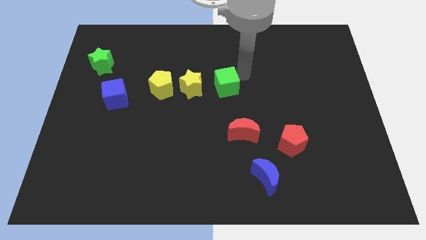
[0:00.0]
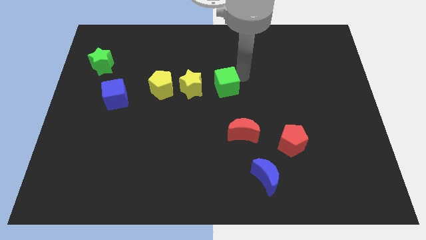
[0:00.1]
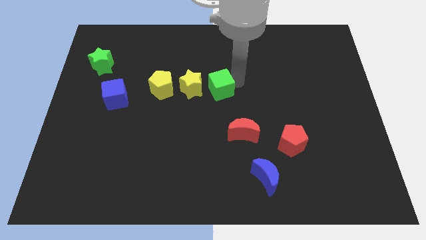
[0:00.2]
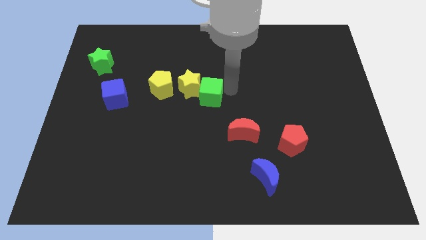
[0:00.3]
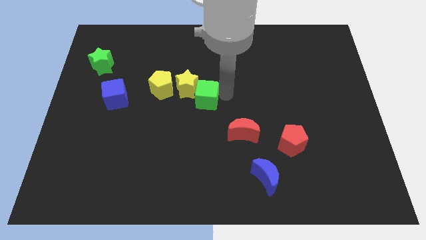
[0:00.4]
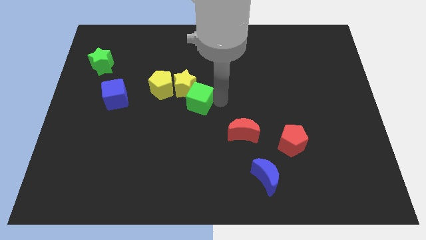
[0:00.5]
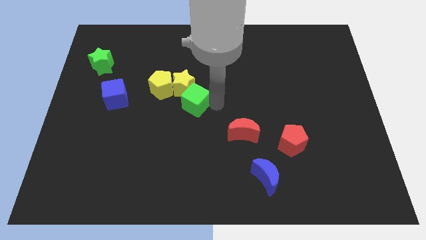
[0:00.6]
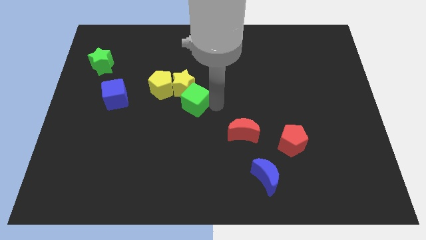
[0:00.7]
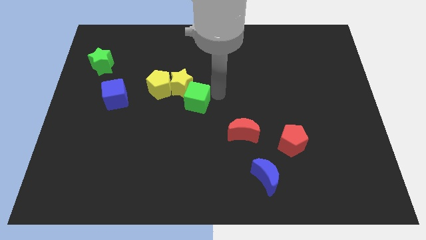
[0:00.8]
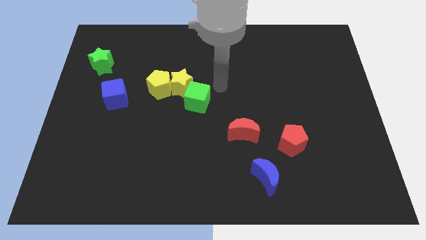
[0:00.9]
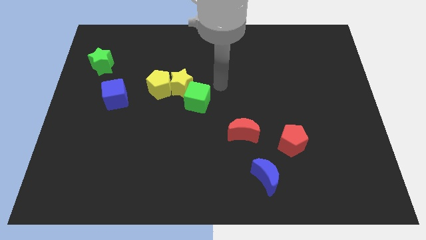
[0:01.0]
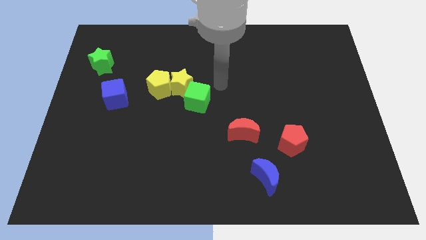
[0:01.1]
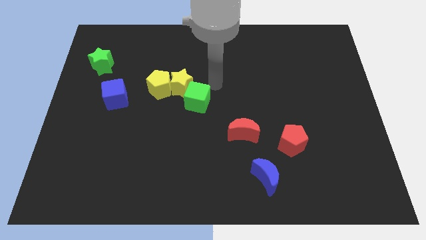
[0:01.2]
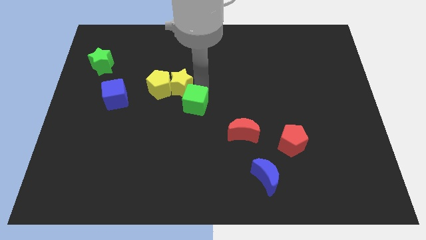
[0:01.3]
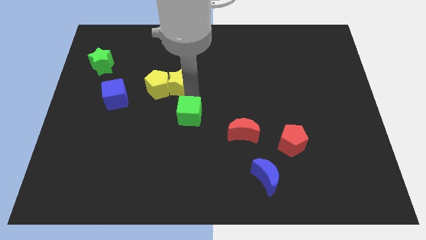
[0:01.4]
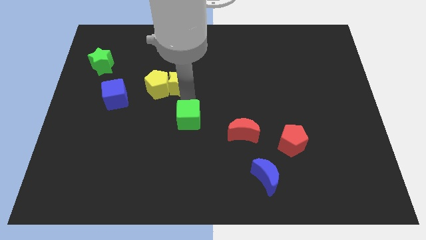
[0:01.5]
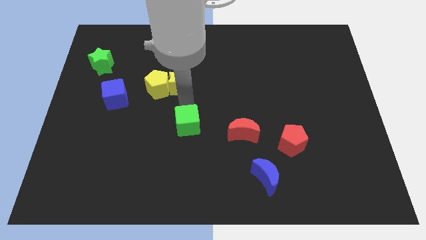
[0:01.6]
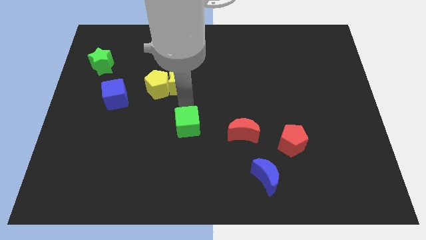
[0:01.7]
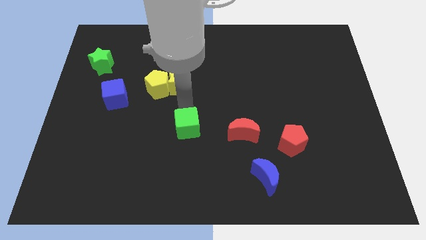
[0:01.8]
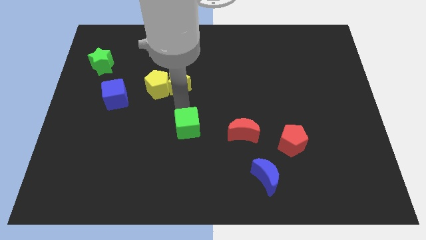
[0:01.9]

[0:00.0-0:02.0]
push the green cube to the left of the red crescent

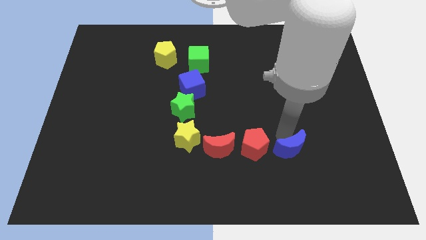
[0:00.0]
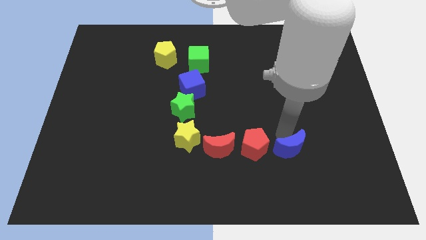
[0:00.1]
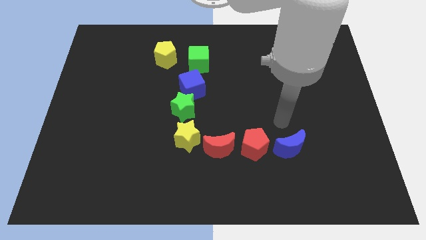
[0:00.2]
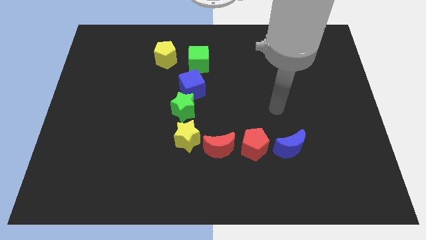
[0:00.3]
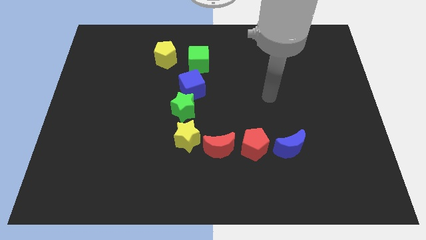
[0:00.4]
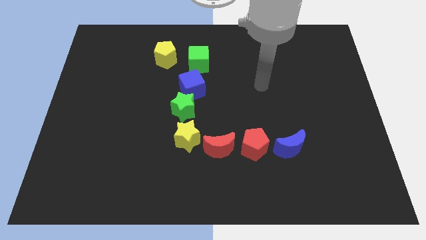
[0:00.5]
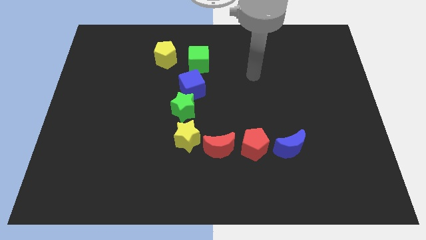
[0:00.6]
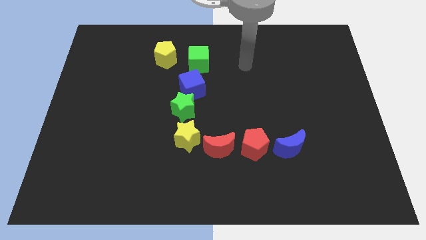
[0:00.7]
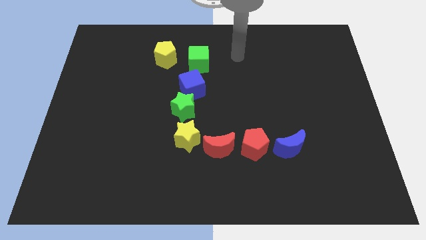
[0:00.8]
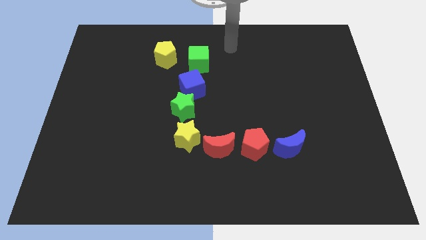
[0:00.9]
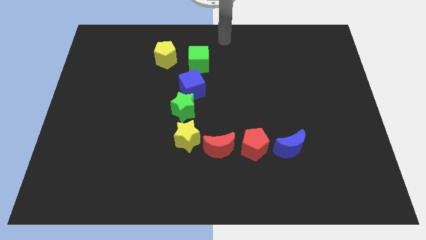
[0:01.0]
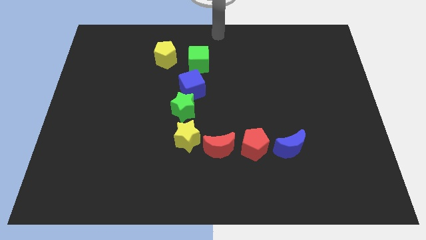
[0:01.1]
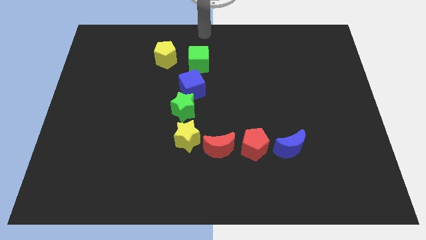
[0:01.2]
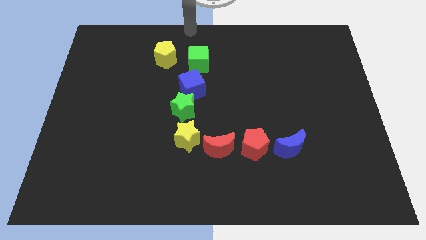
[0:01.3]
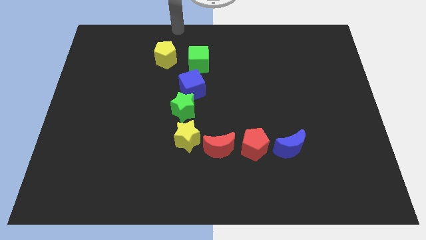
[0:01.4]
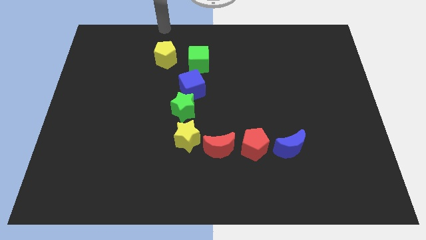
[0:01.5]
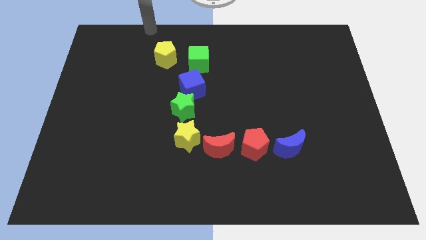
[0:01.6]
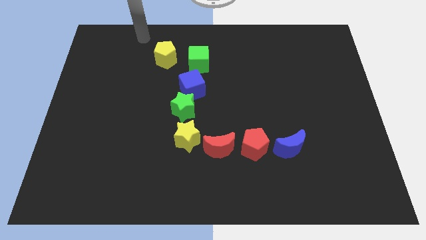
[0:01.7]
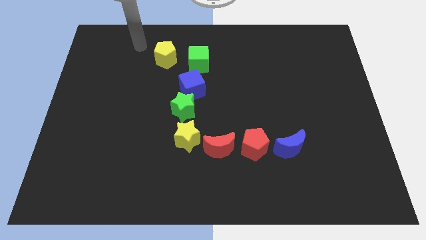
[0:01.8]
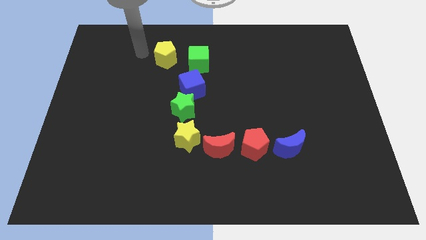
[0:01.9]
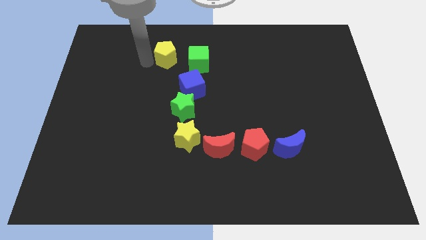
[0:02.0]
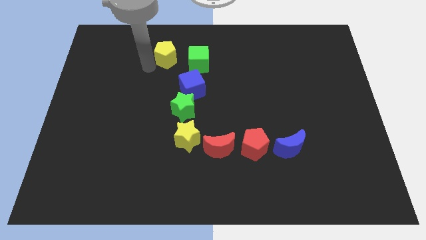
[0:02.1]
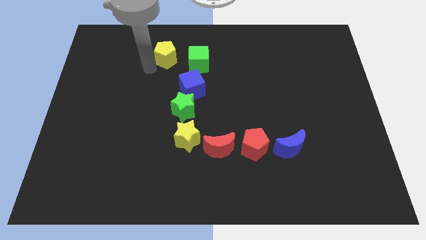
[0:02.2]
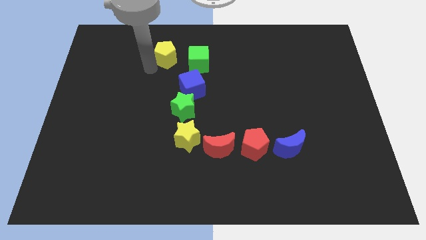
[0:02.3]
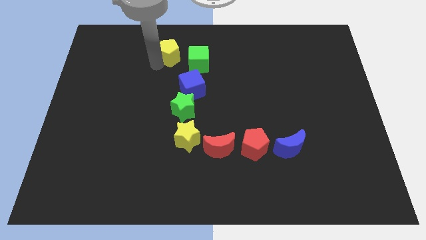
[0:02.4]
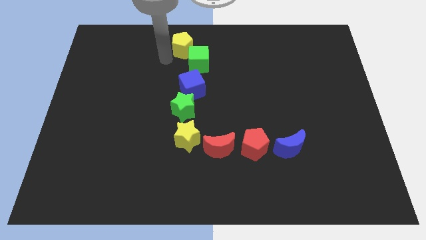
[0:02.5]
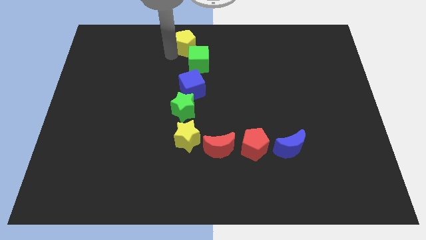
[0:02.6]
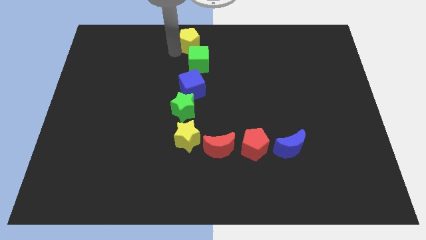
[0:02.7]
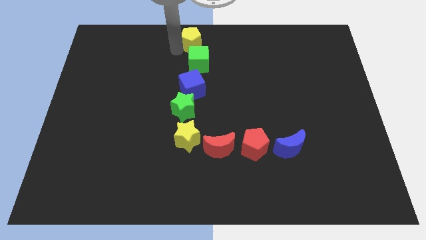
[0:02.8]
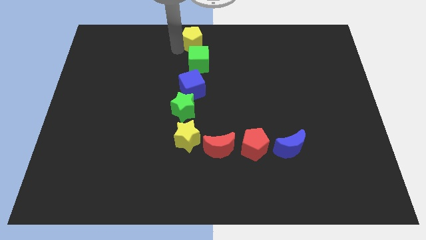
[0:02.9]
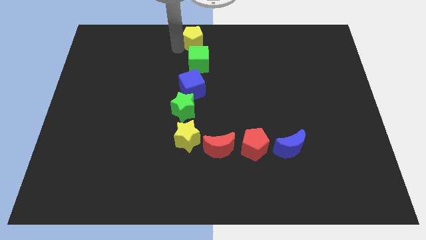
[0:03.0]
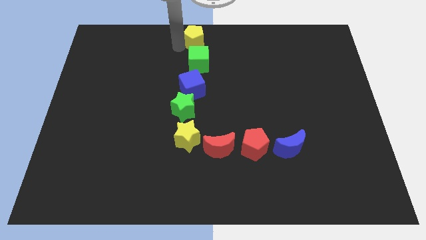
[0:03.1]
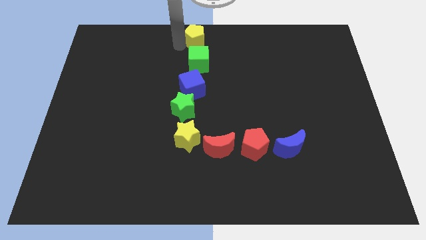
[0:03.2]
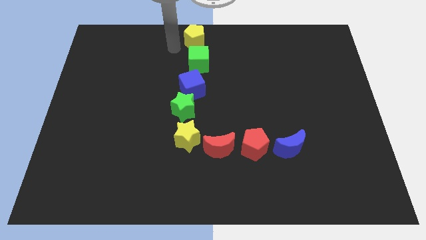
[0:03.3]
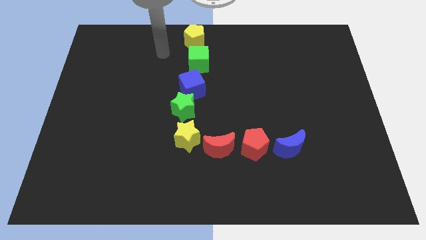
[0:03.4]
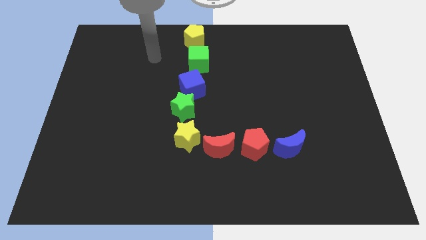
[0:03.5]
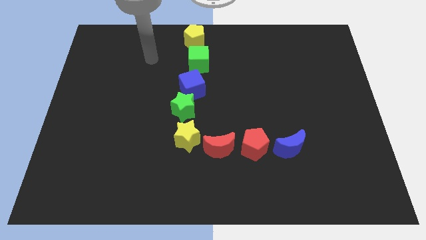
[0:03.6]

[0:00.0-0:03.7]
place the yellow pentagon above the green cube

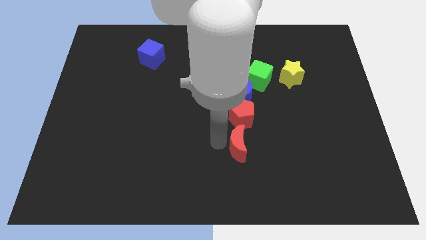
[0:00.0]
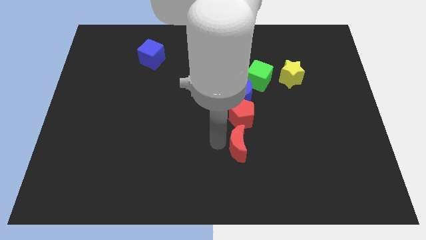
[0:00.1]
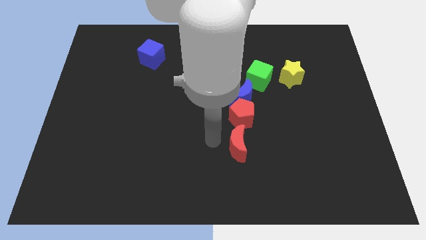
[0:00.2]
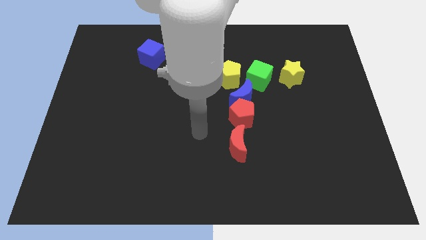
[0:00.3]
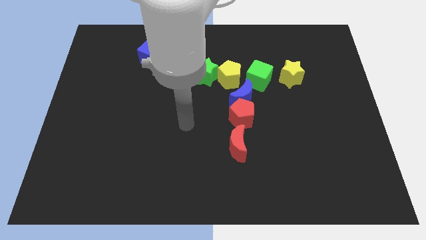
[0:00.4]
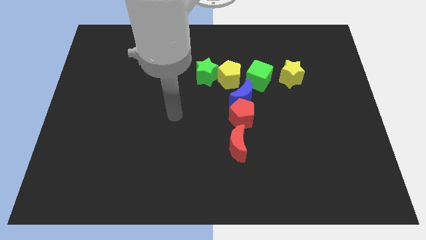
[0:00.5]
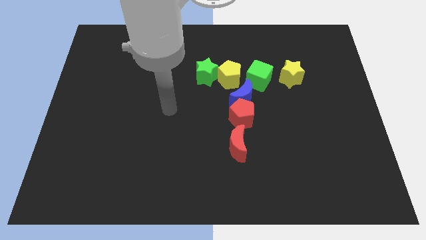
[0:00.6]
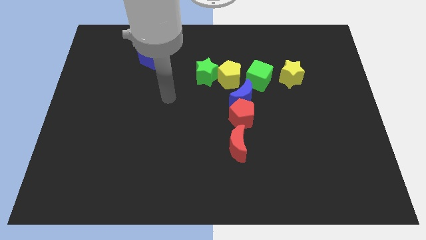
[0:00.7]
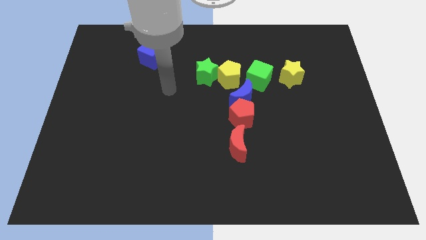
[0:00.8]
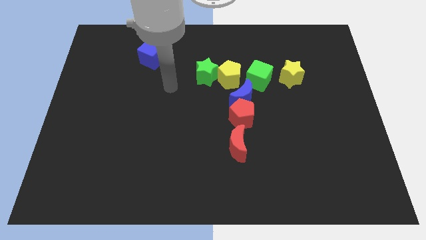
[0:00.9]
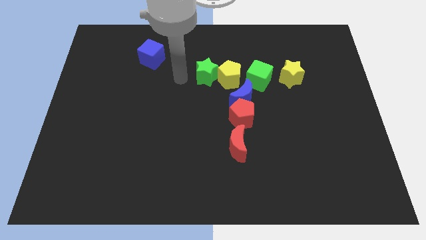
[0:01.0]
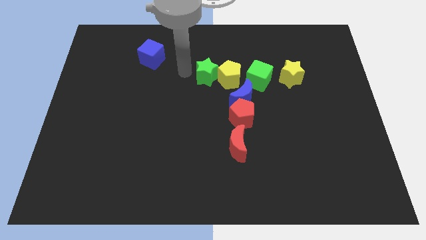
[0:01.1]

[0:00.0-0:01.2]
move your arm to the left side of the green star

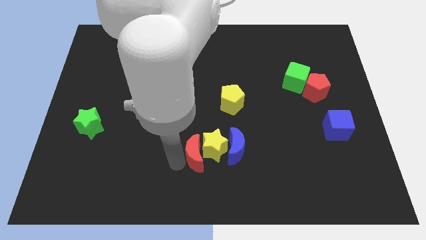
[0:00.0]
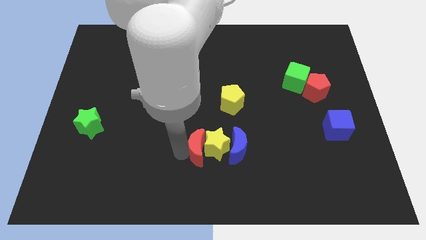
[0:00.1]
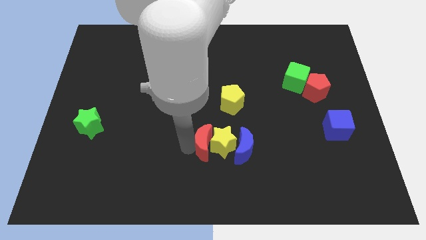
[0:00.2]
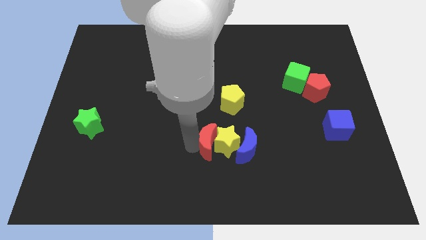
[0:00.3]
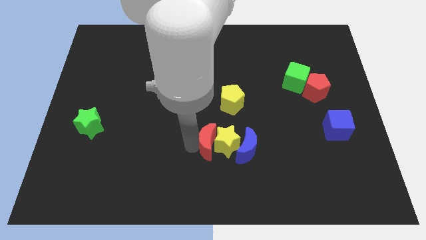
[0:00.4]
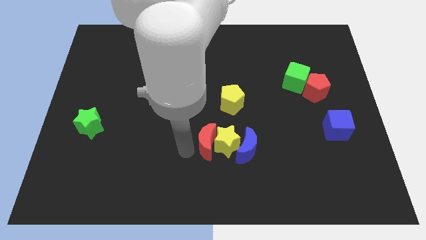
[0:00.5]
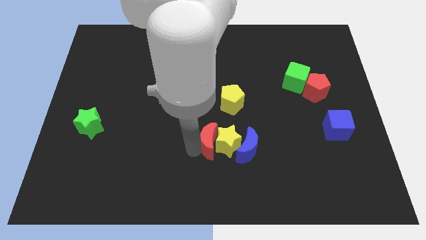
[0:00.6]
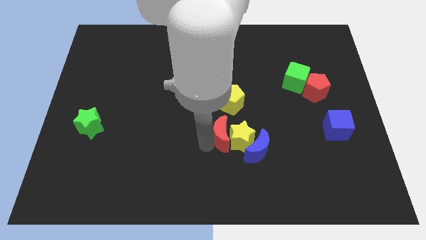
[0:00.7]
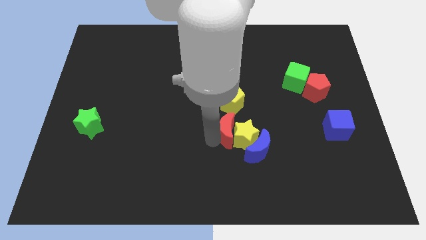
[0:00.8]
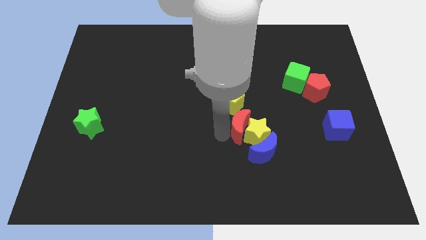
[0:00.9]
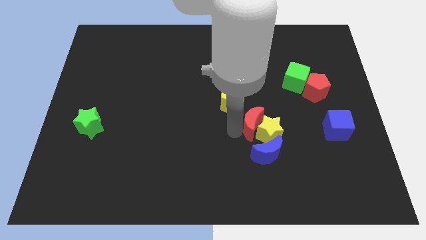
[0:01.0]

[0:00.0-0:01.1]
push red crescent in between yellow pentagon and yellow star

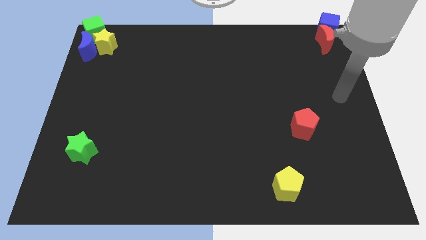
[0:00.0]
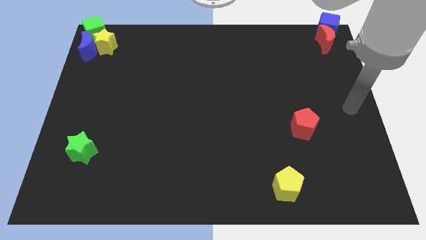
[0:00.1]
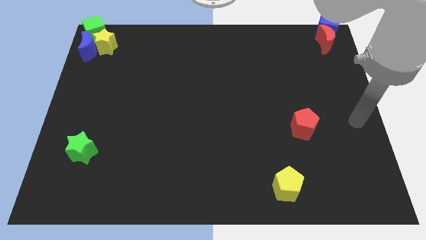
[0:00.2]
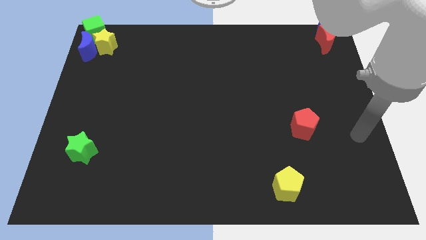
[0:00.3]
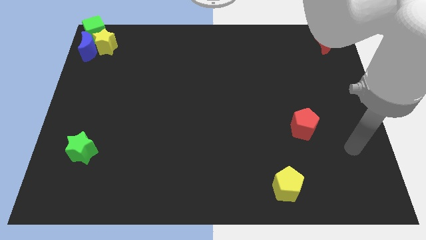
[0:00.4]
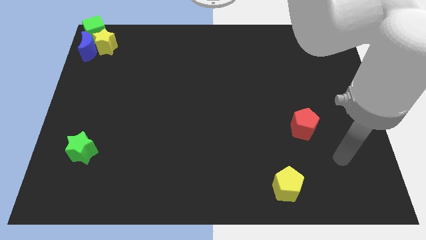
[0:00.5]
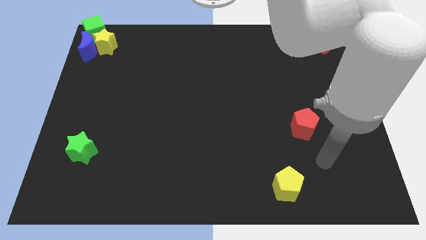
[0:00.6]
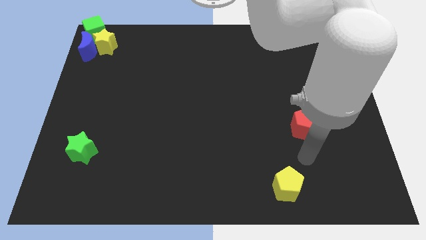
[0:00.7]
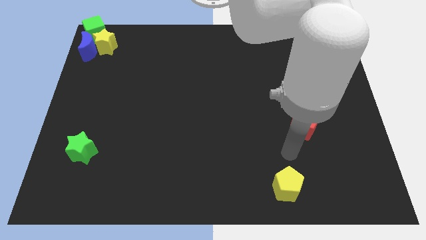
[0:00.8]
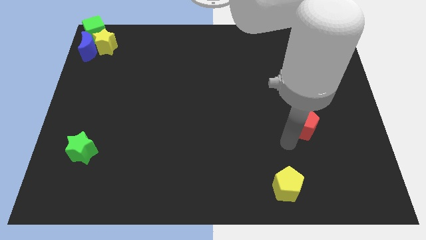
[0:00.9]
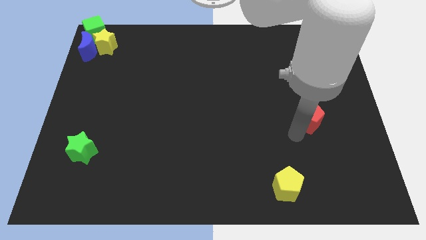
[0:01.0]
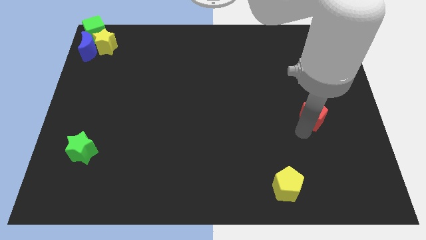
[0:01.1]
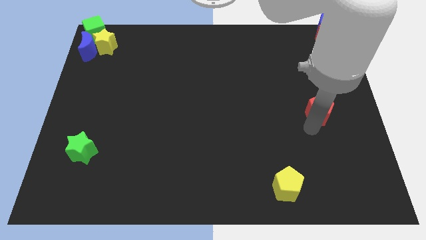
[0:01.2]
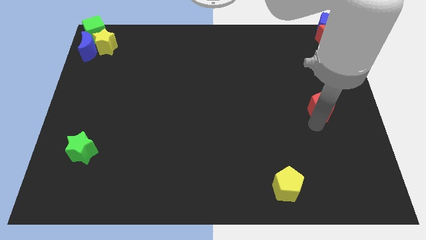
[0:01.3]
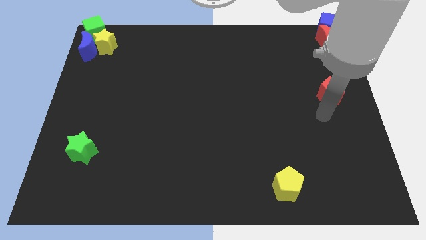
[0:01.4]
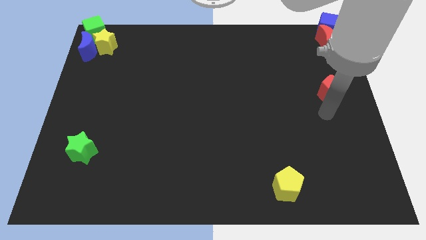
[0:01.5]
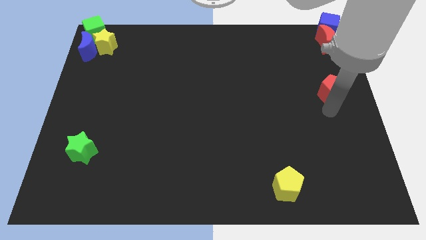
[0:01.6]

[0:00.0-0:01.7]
move the red pentagon towards top
